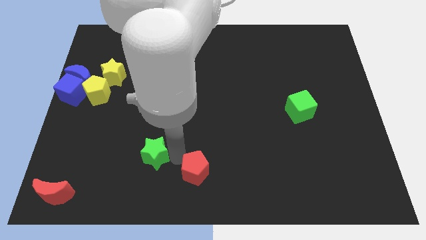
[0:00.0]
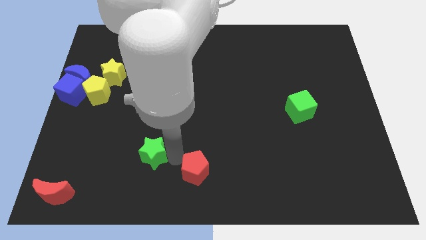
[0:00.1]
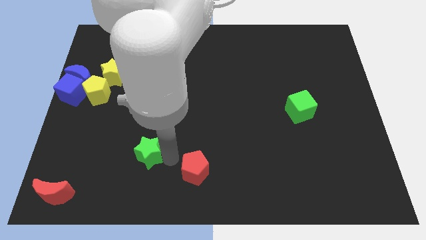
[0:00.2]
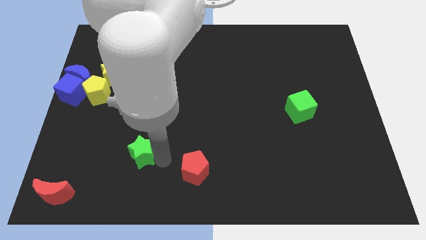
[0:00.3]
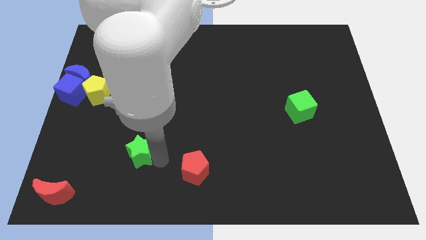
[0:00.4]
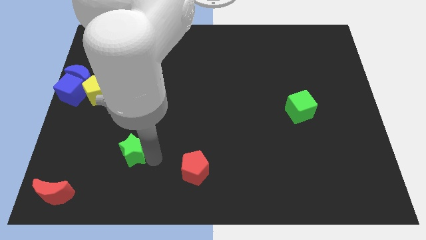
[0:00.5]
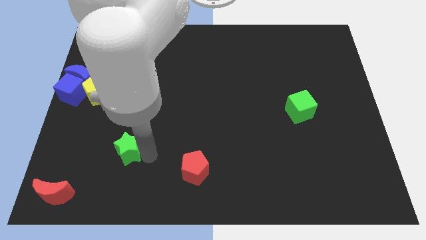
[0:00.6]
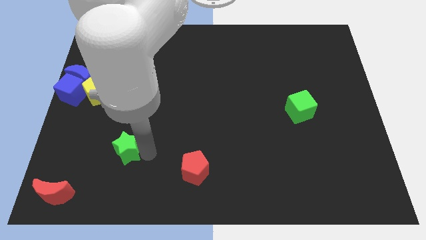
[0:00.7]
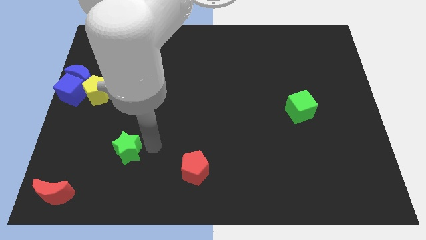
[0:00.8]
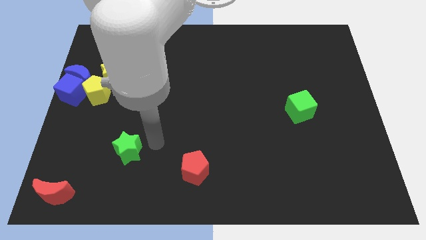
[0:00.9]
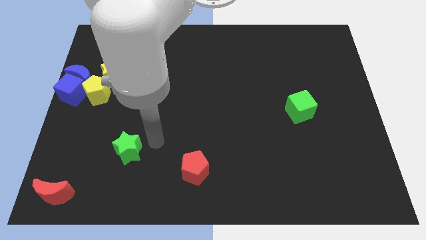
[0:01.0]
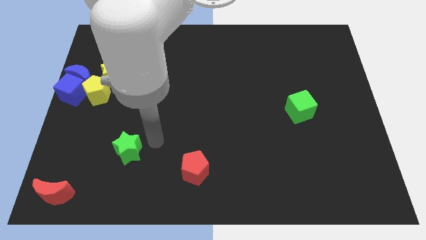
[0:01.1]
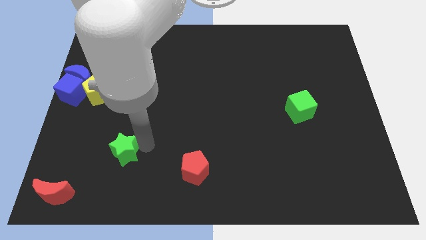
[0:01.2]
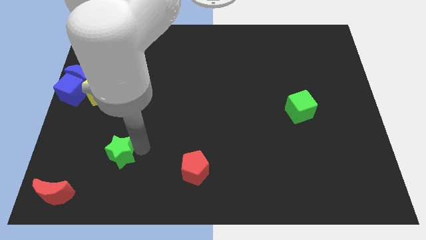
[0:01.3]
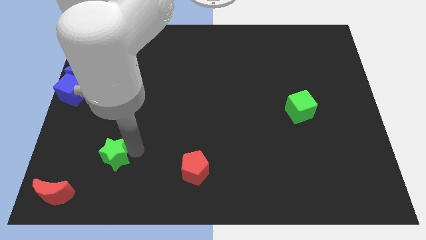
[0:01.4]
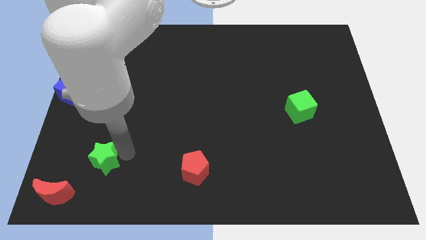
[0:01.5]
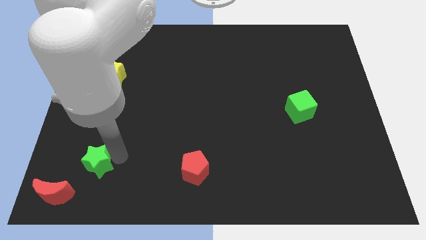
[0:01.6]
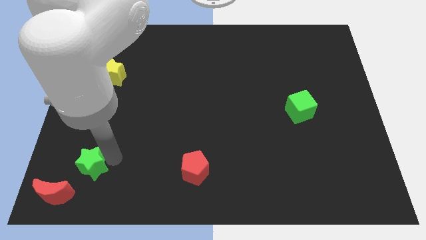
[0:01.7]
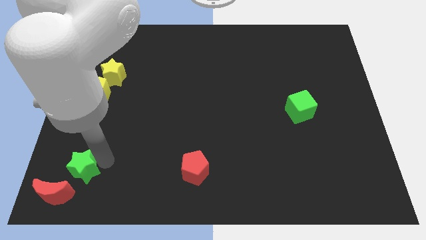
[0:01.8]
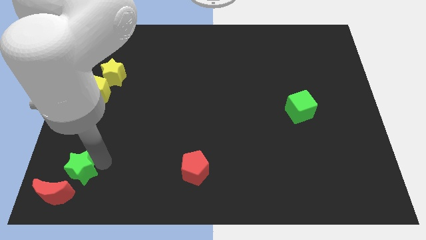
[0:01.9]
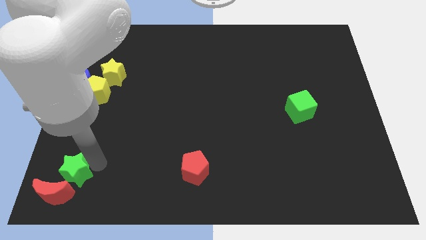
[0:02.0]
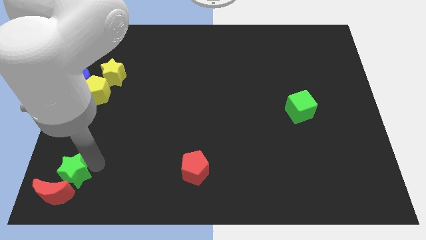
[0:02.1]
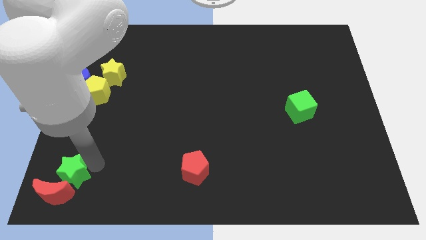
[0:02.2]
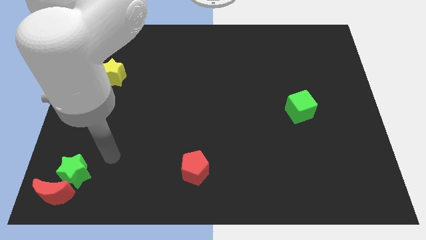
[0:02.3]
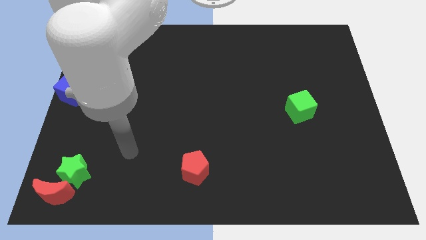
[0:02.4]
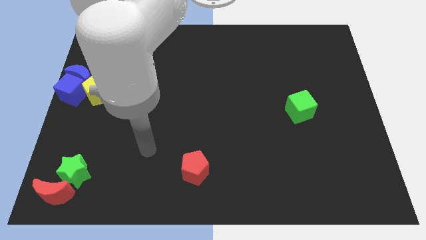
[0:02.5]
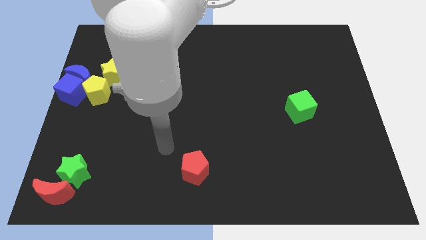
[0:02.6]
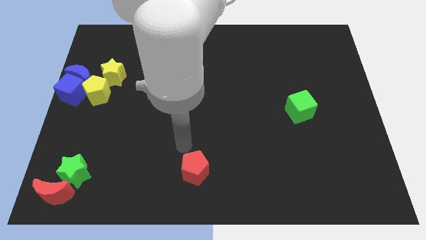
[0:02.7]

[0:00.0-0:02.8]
move the green star to the top side of the red moon

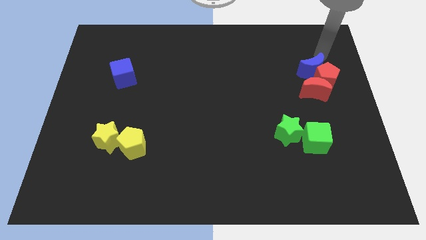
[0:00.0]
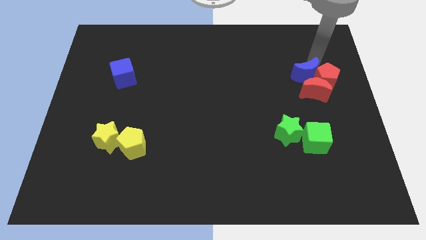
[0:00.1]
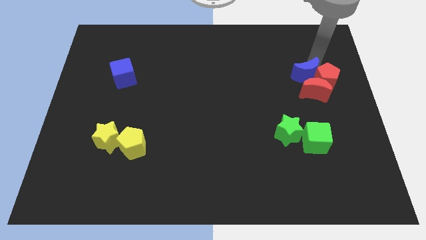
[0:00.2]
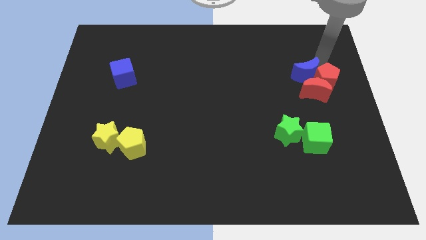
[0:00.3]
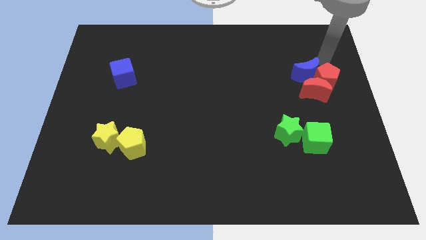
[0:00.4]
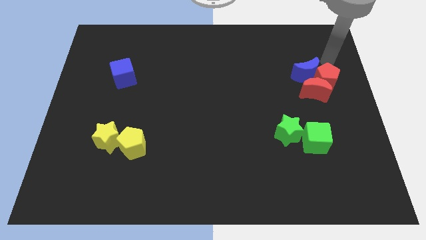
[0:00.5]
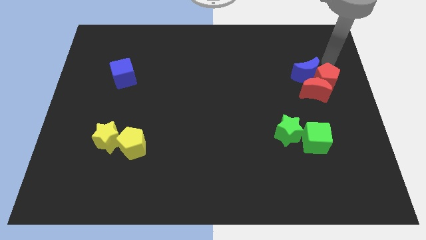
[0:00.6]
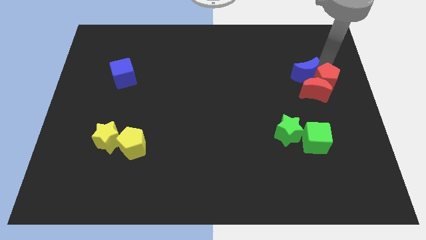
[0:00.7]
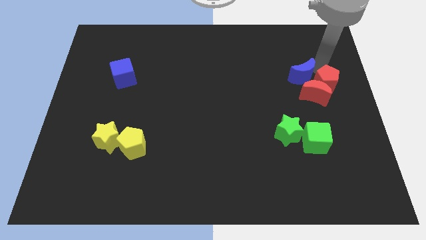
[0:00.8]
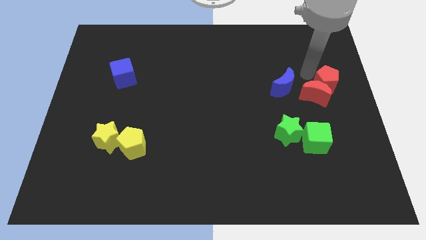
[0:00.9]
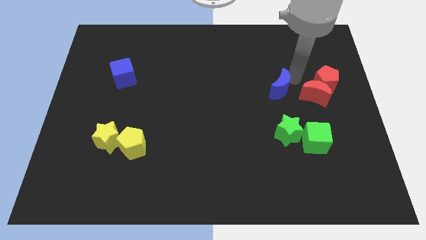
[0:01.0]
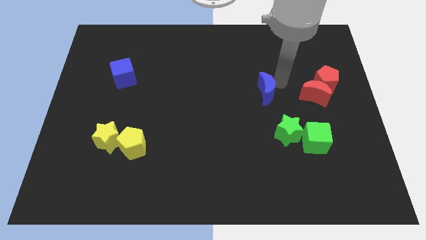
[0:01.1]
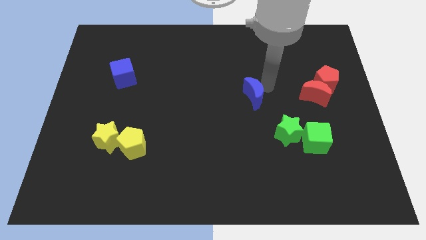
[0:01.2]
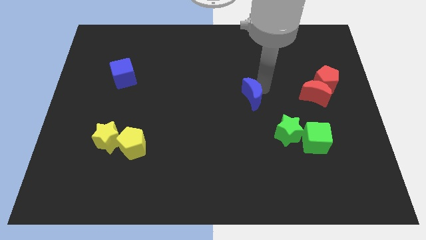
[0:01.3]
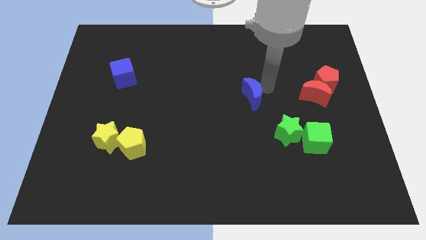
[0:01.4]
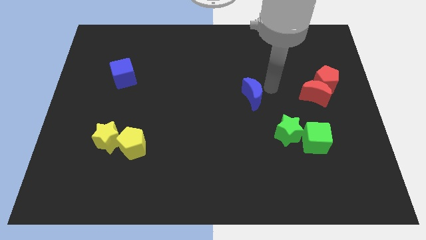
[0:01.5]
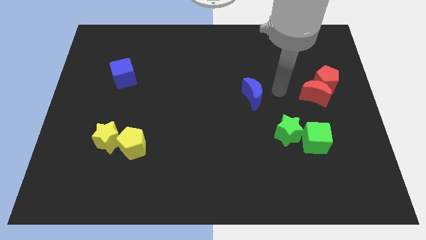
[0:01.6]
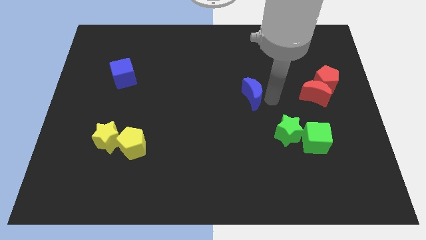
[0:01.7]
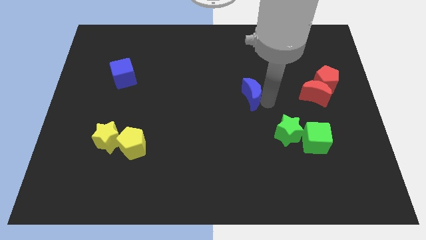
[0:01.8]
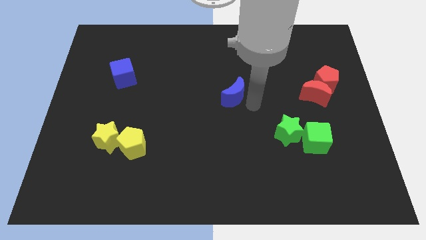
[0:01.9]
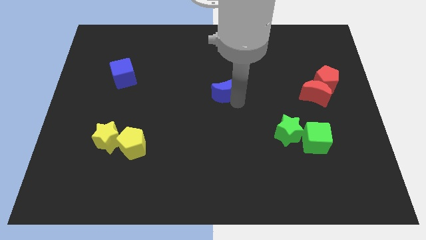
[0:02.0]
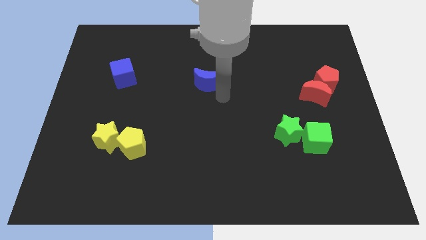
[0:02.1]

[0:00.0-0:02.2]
place the blue moon in between the red moon and blue cube

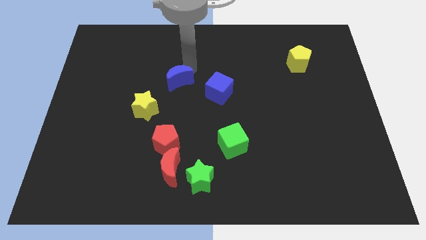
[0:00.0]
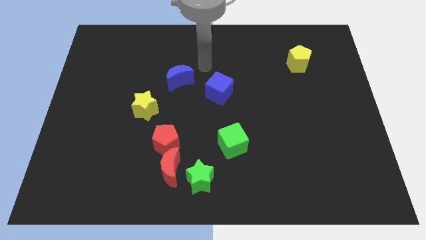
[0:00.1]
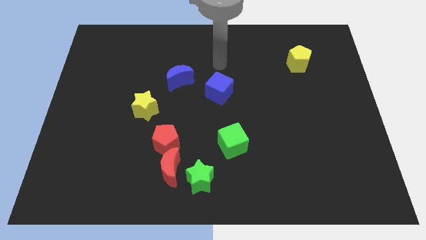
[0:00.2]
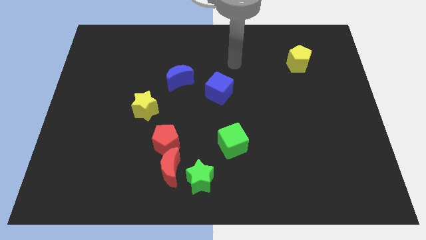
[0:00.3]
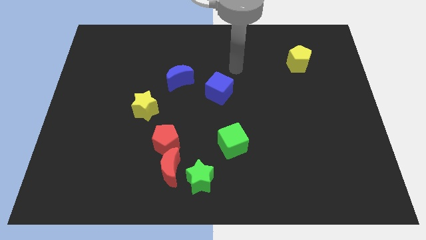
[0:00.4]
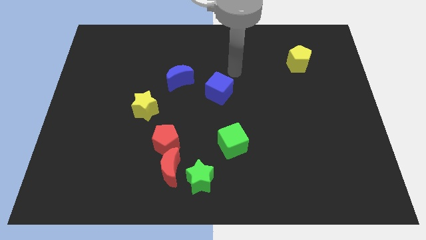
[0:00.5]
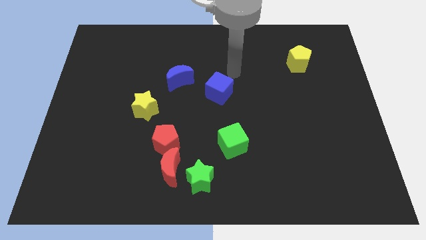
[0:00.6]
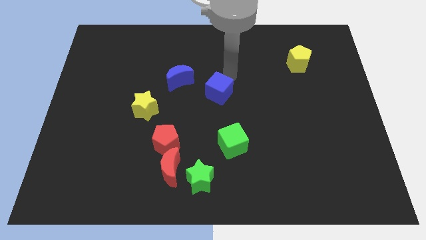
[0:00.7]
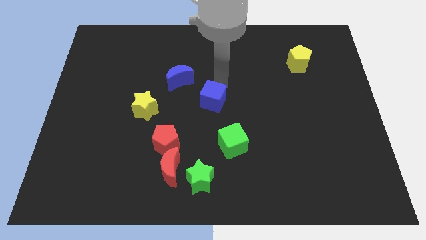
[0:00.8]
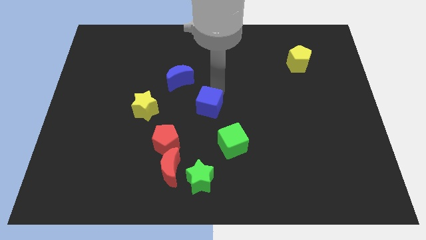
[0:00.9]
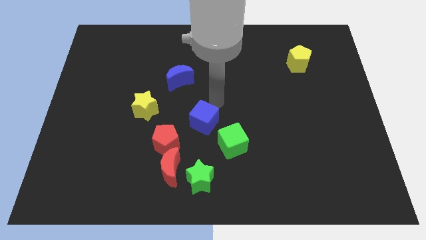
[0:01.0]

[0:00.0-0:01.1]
slide blue cube towards center

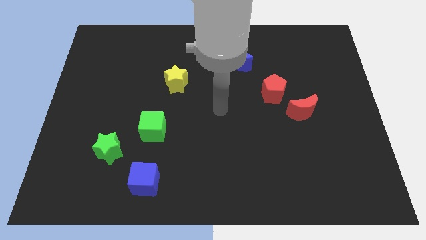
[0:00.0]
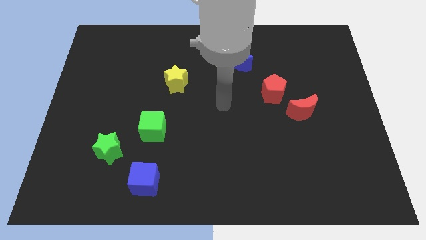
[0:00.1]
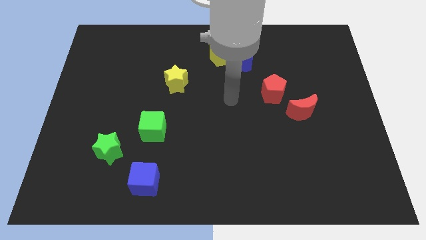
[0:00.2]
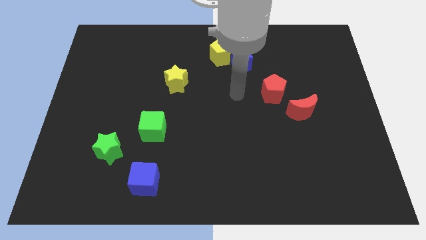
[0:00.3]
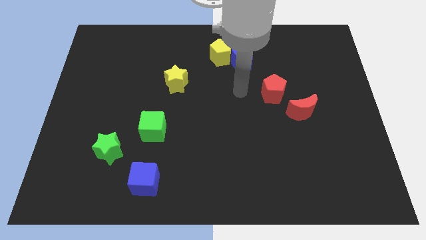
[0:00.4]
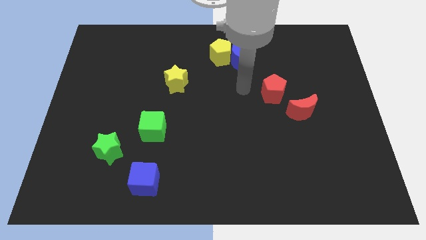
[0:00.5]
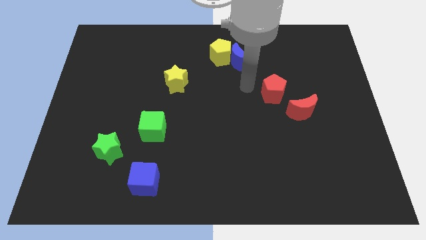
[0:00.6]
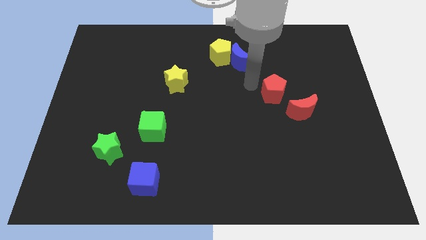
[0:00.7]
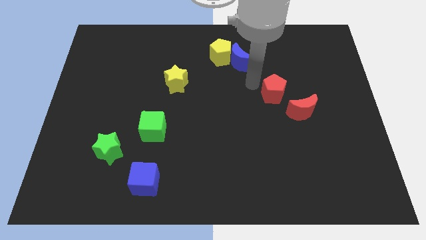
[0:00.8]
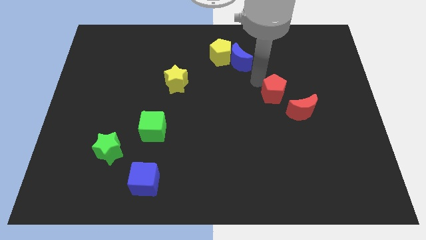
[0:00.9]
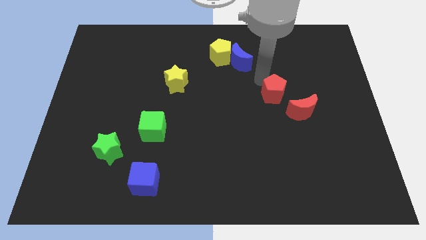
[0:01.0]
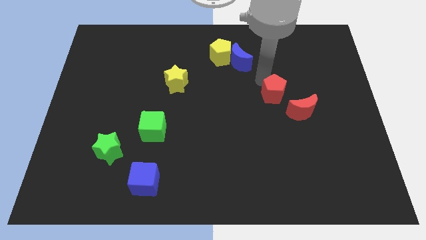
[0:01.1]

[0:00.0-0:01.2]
move arm to the top of red pentagon

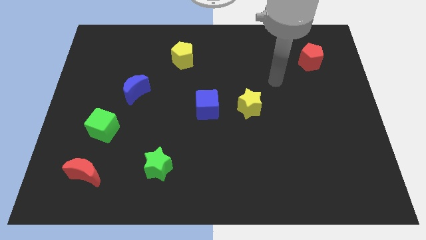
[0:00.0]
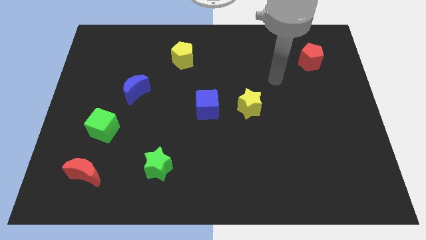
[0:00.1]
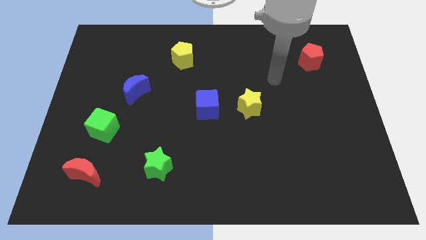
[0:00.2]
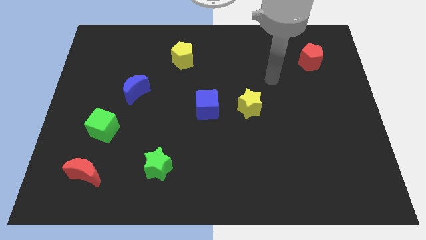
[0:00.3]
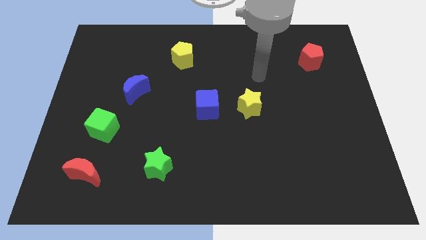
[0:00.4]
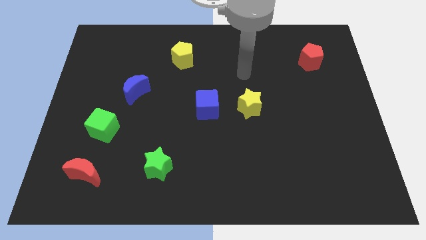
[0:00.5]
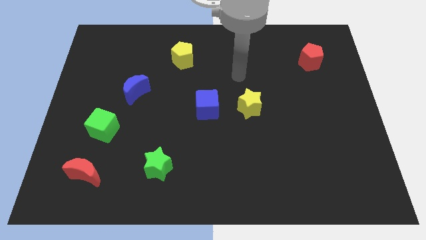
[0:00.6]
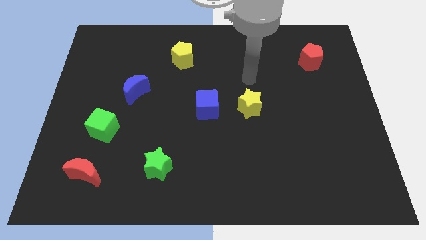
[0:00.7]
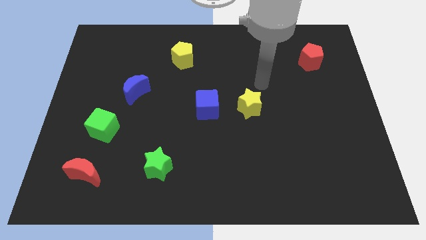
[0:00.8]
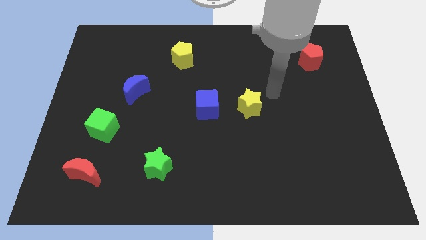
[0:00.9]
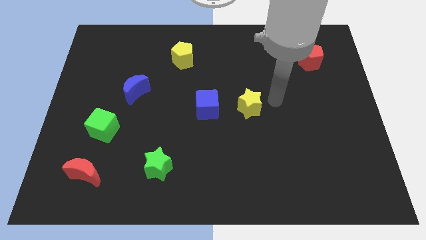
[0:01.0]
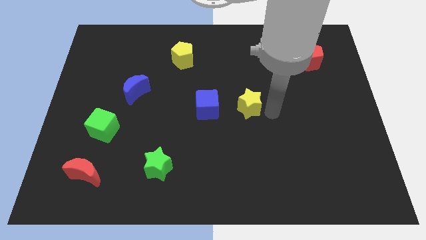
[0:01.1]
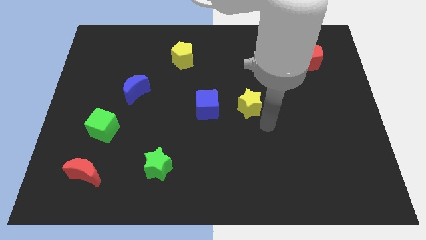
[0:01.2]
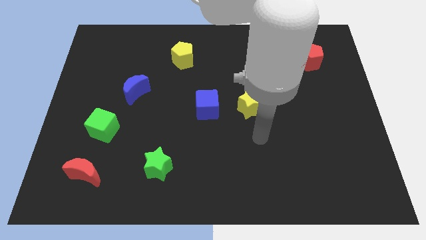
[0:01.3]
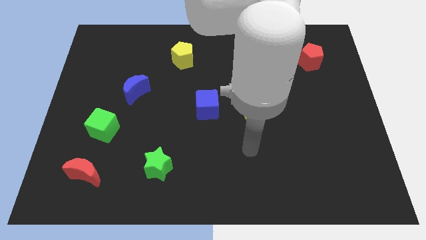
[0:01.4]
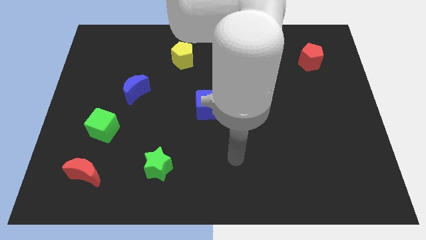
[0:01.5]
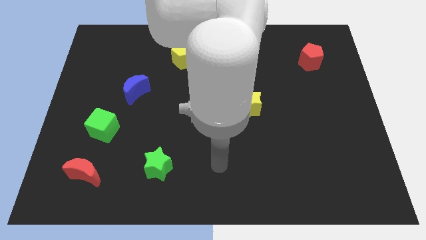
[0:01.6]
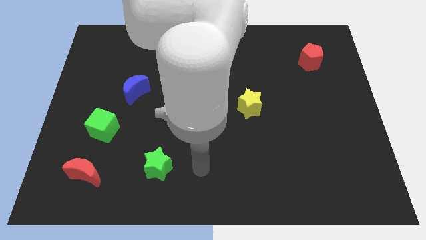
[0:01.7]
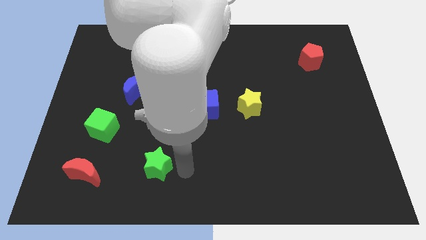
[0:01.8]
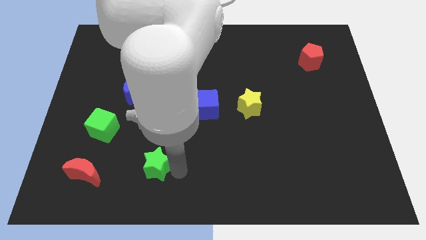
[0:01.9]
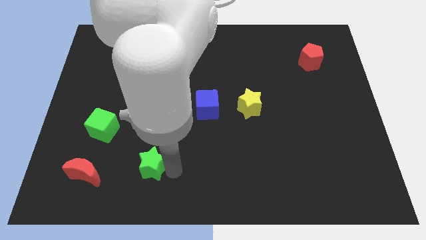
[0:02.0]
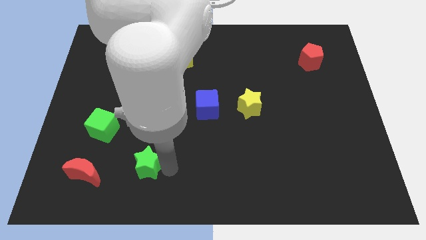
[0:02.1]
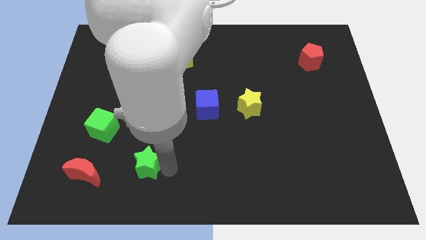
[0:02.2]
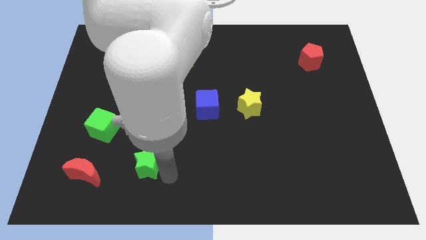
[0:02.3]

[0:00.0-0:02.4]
move the green star slightly to the left
